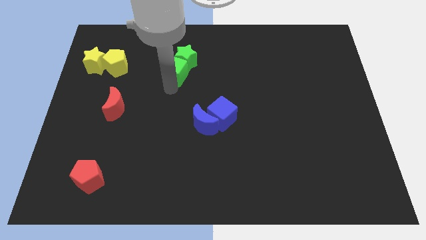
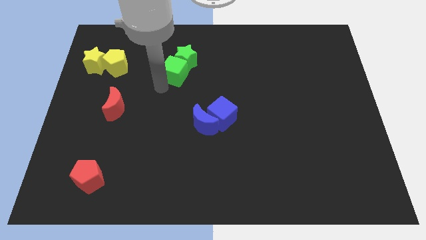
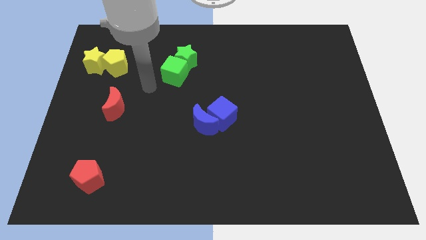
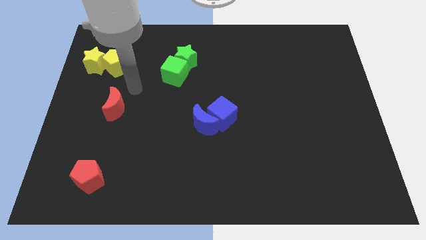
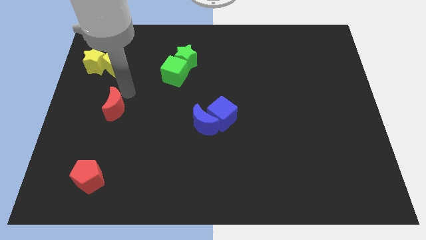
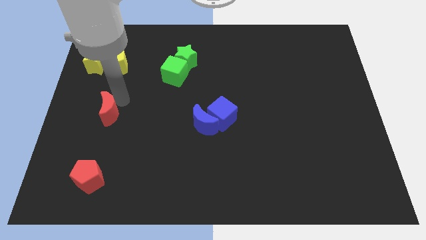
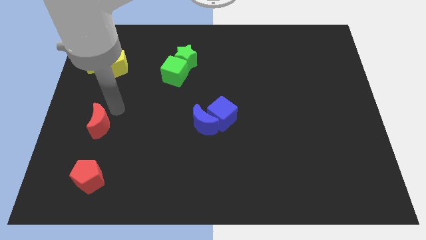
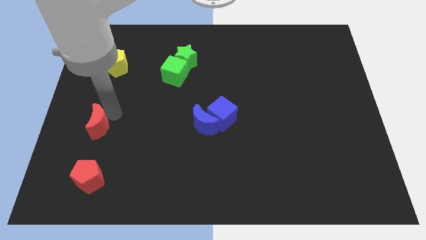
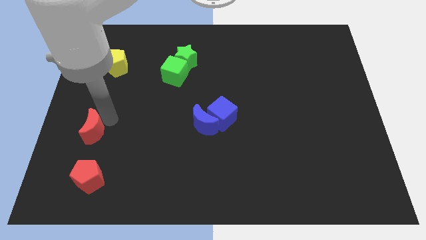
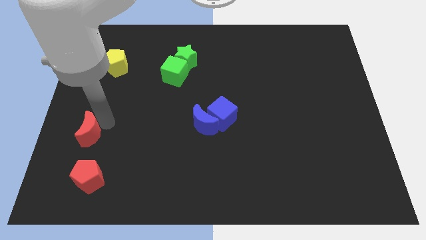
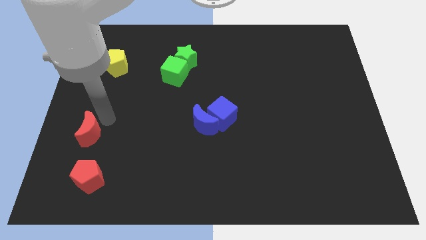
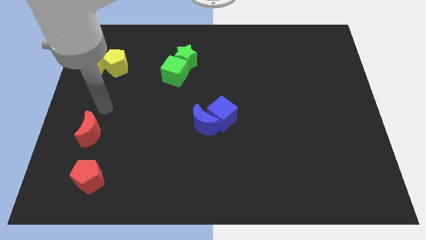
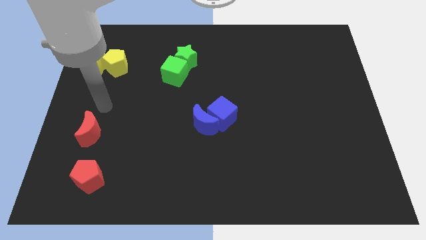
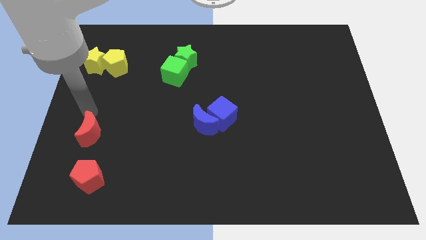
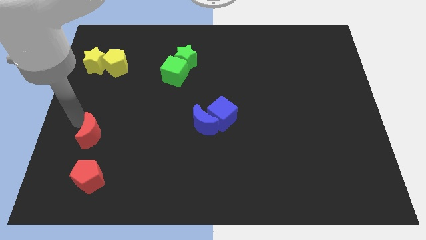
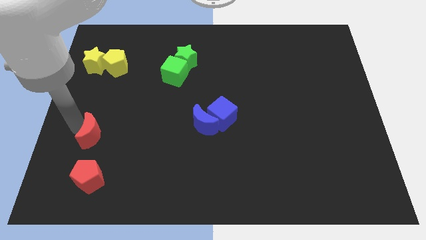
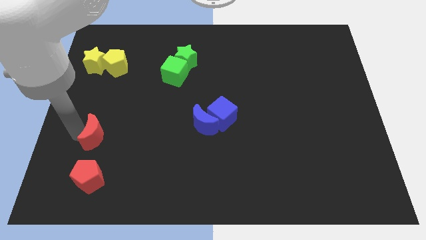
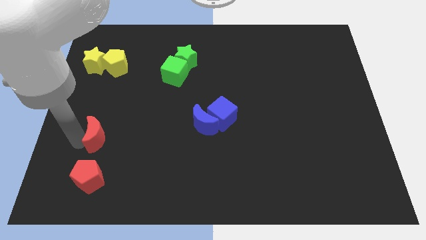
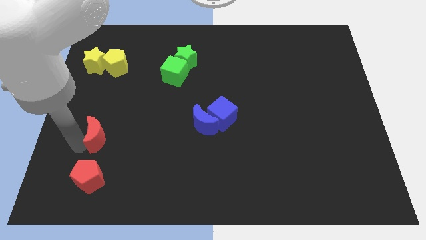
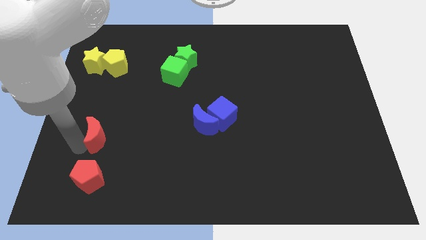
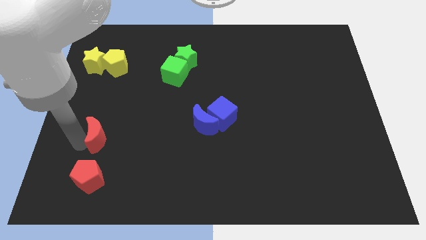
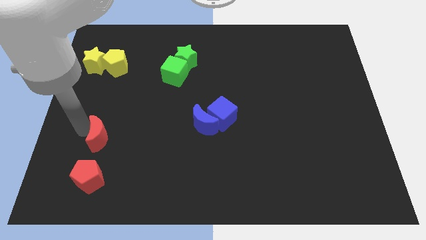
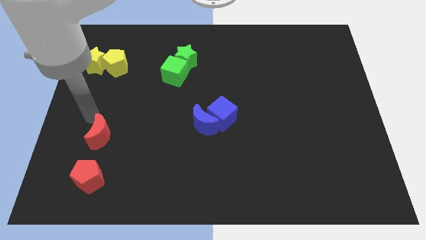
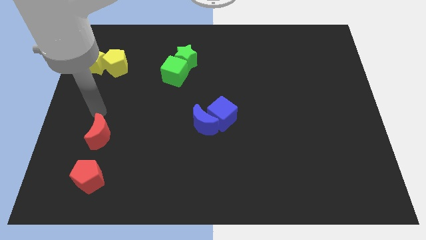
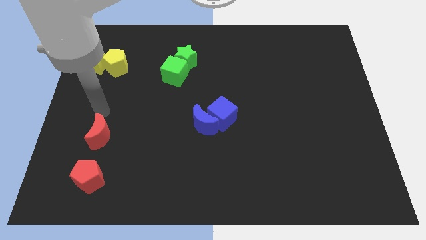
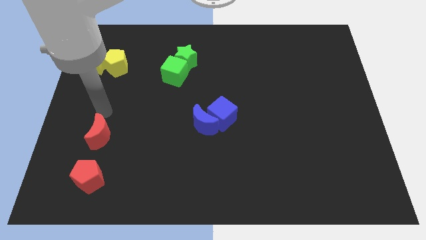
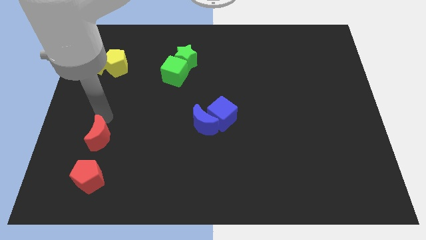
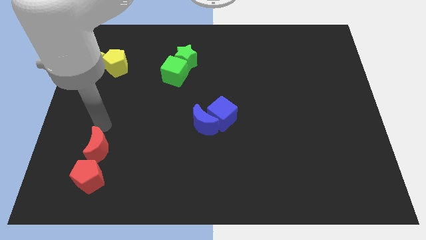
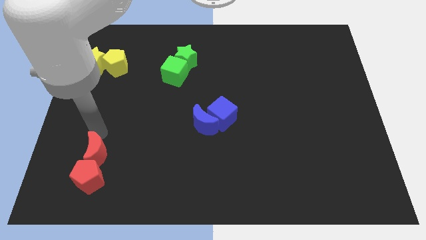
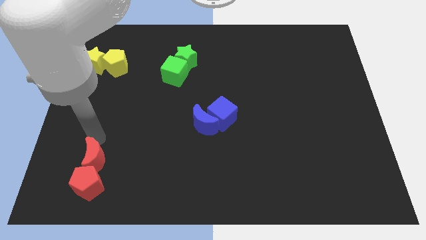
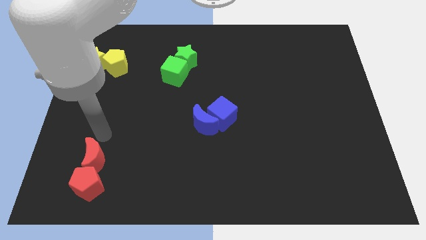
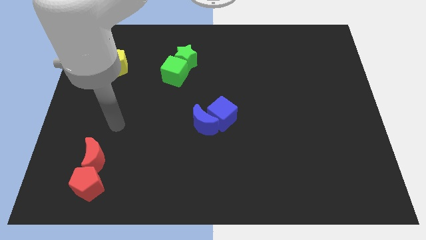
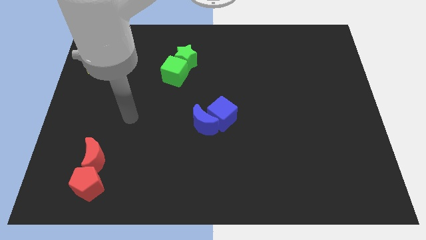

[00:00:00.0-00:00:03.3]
place red moon towards the red pentagon

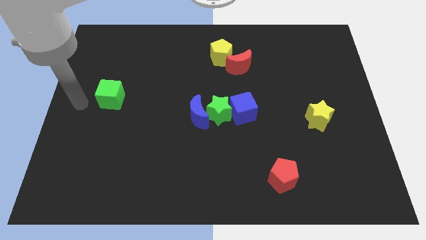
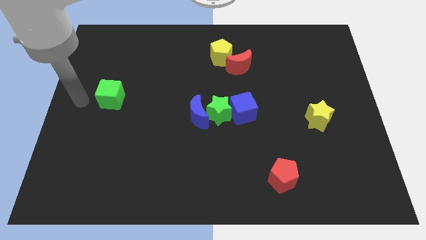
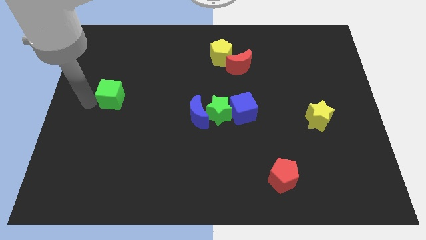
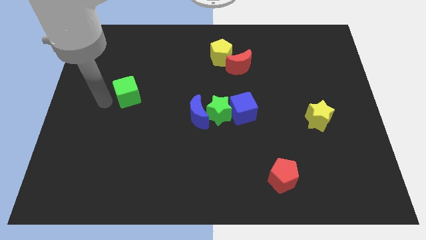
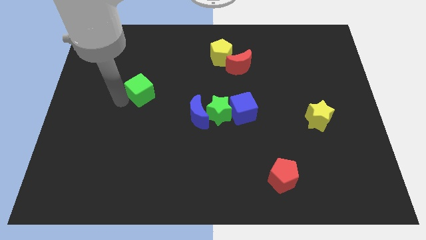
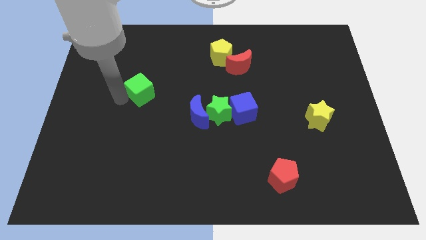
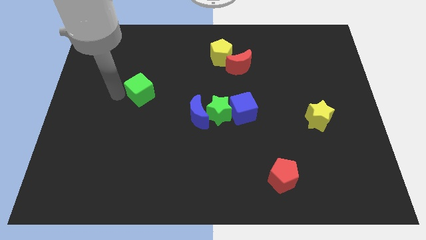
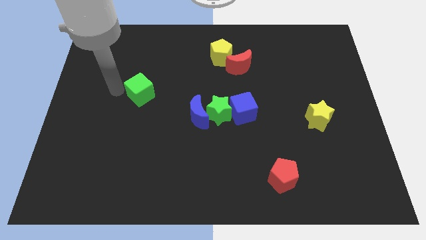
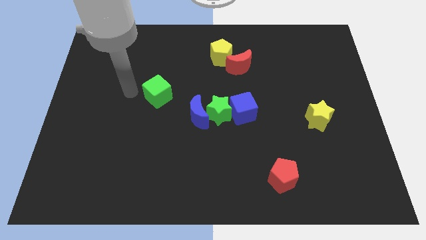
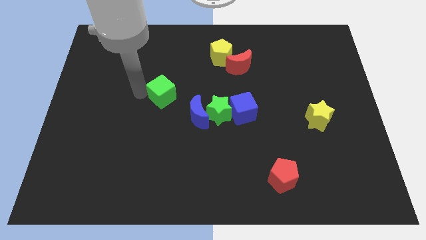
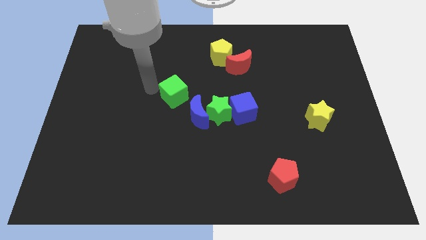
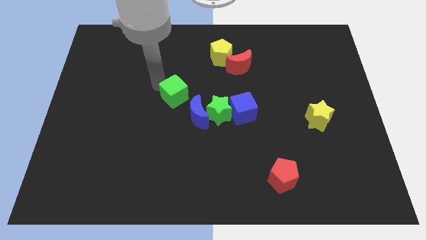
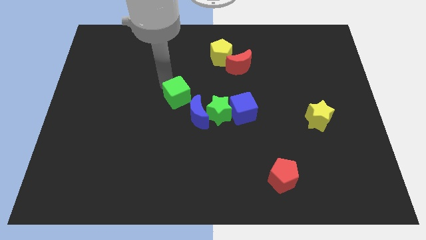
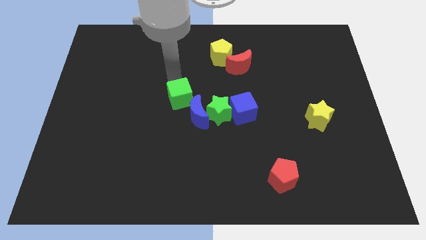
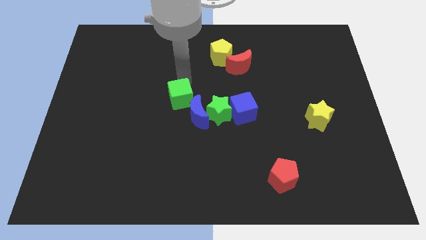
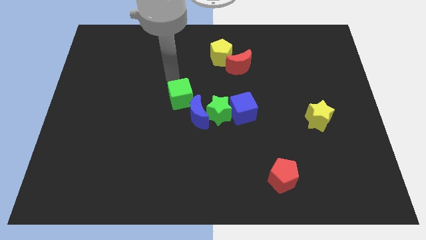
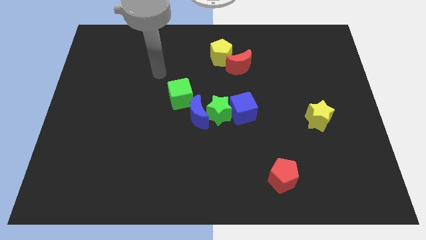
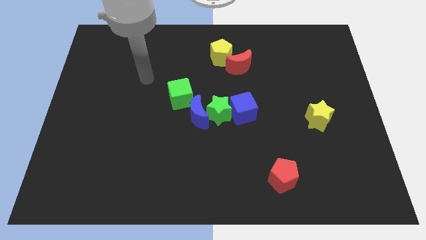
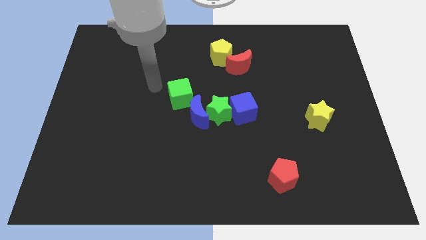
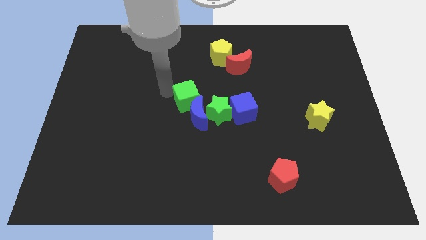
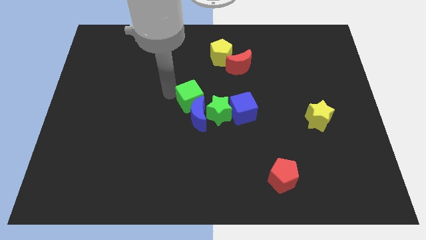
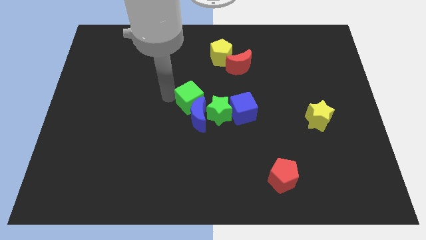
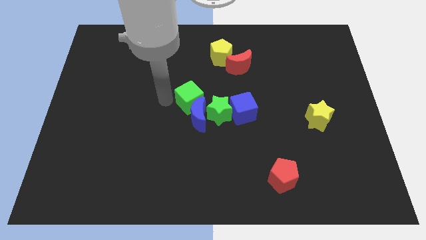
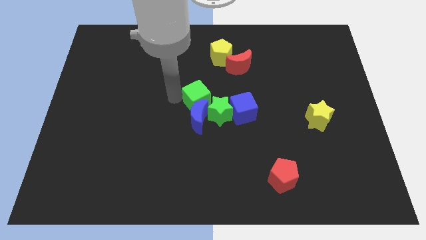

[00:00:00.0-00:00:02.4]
push the green cube towards the group of blocks

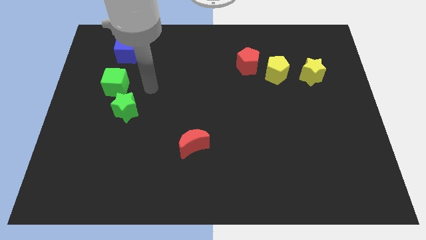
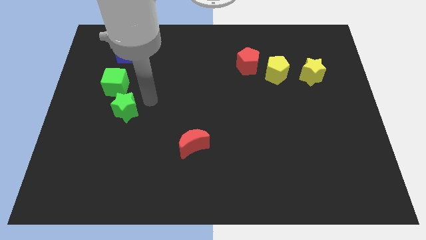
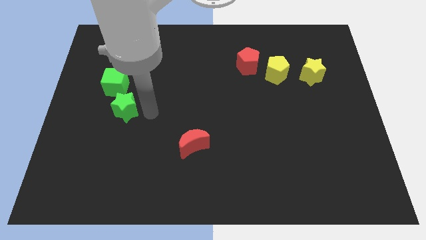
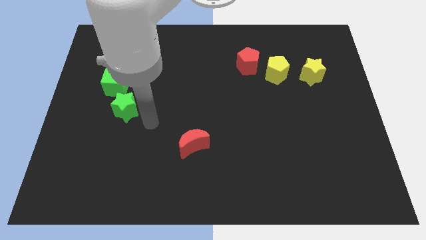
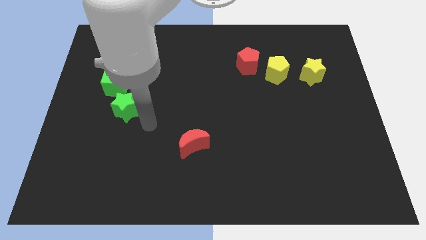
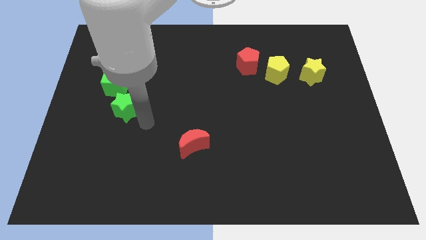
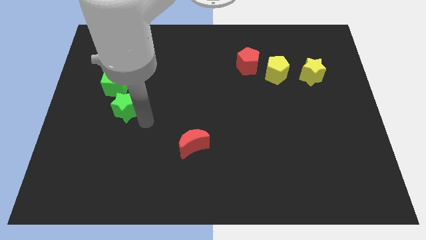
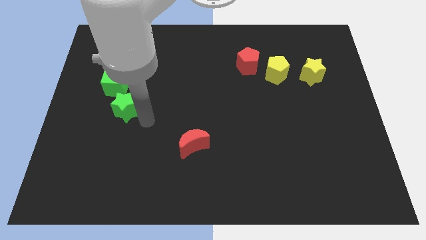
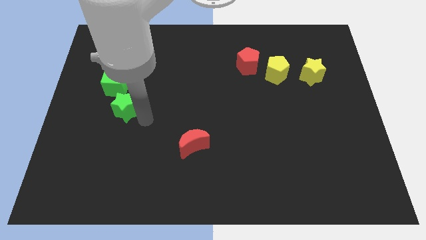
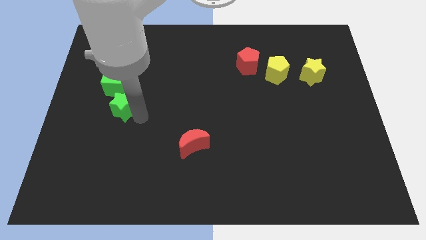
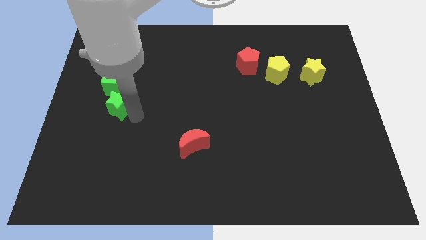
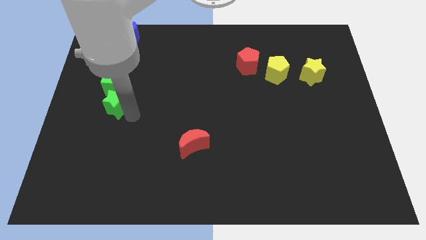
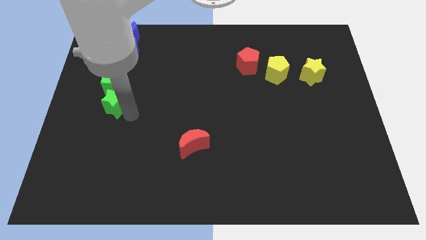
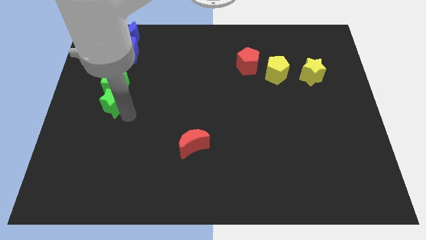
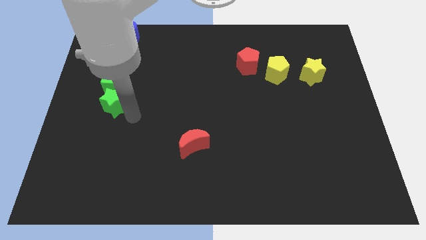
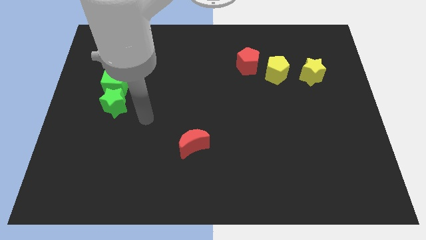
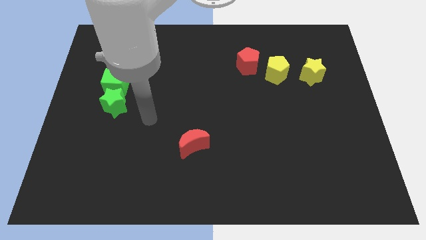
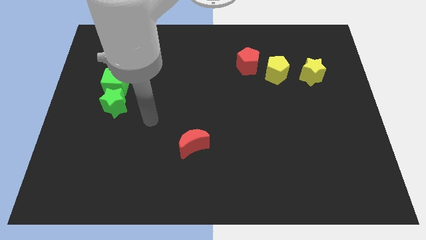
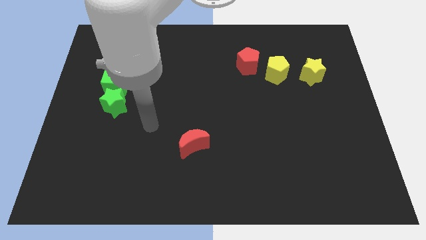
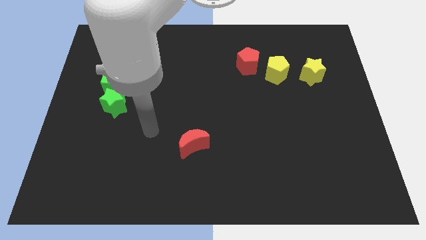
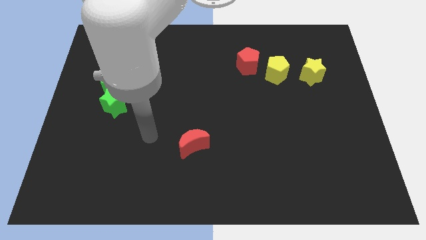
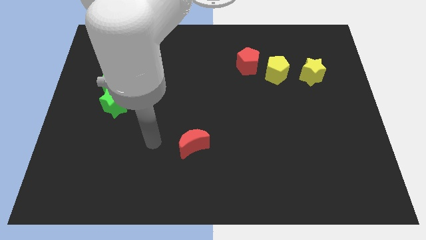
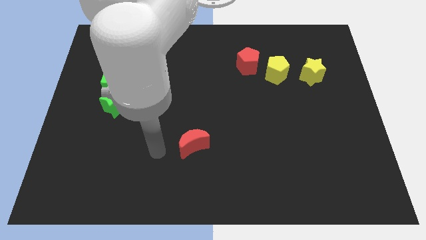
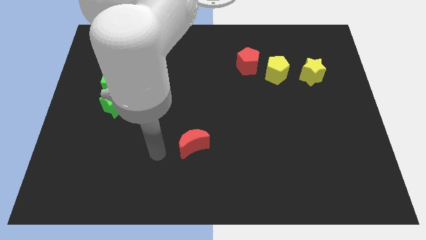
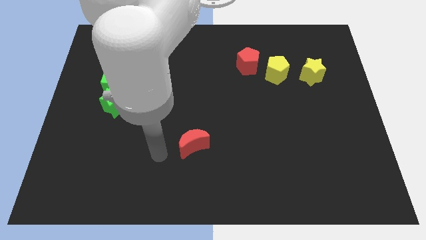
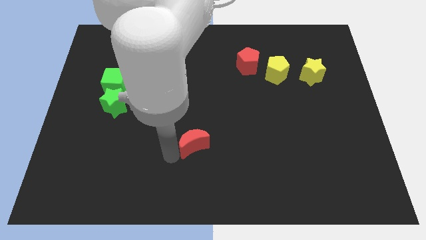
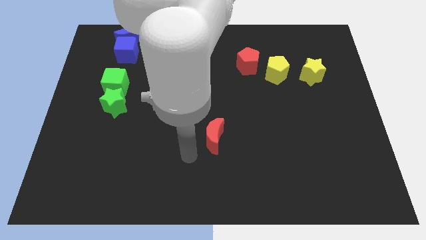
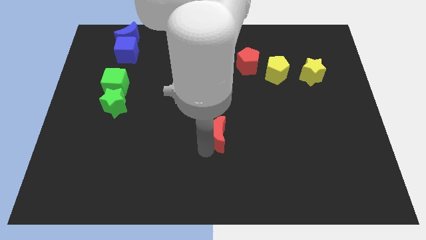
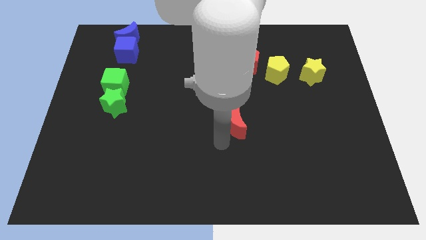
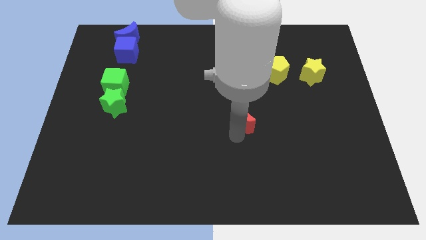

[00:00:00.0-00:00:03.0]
slightly move the green star to the bottom of green cube

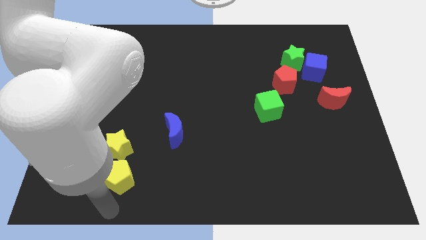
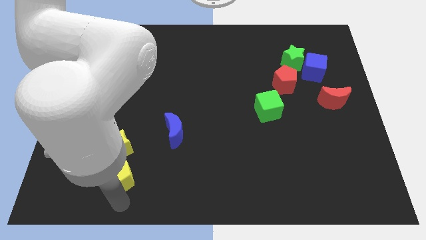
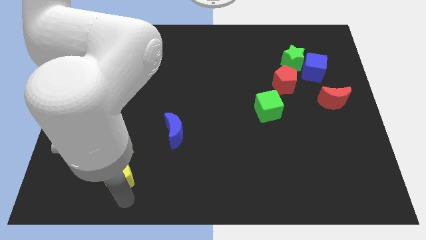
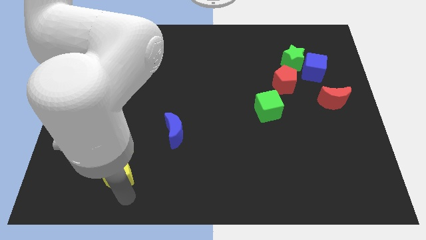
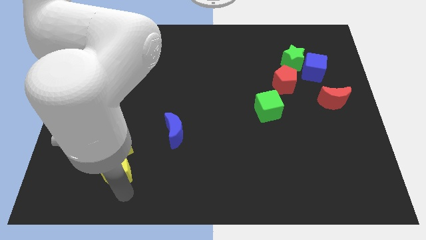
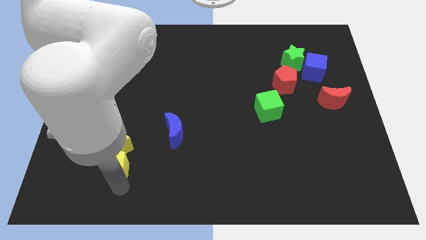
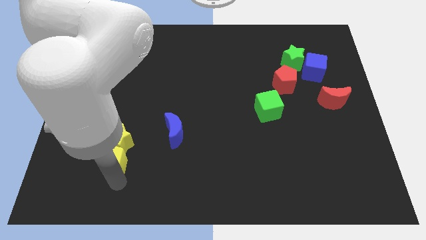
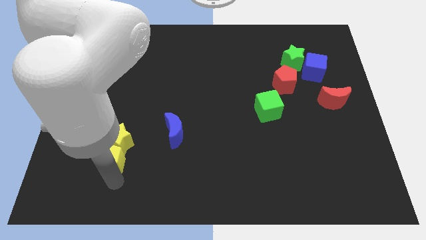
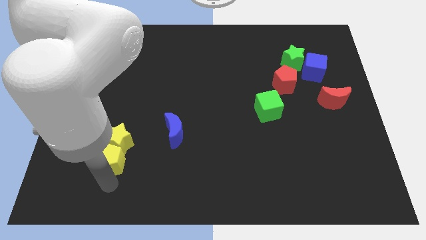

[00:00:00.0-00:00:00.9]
push the yellow pentagon into yellow star
